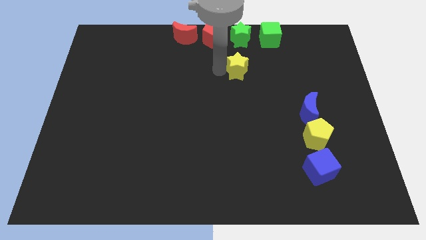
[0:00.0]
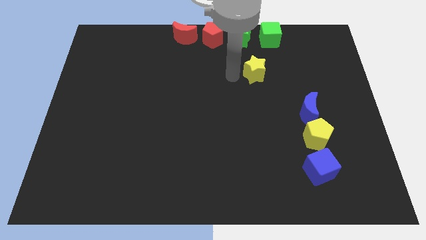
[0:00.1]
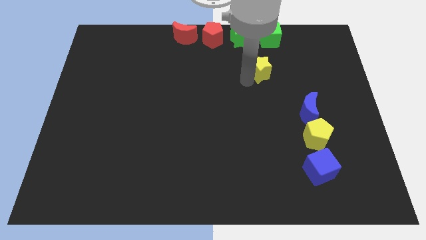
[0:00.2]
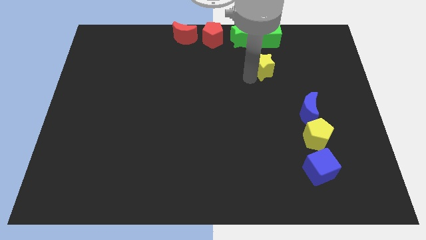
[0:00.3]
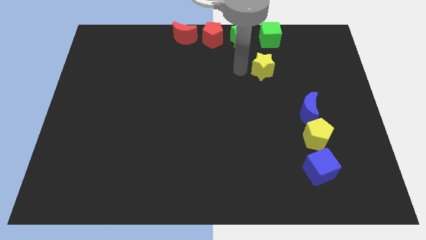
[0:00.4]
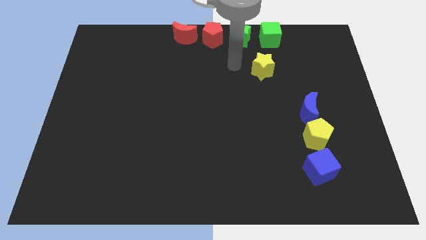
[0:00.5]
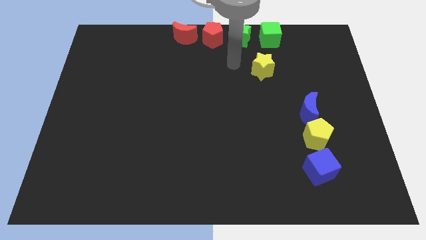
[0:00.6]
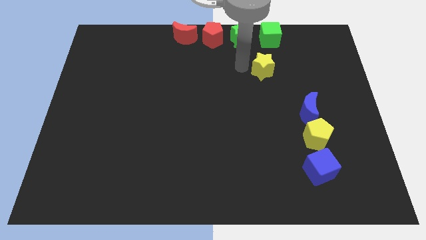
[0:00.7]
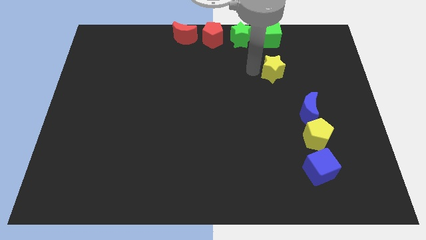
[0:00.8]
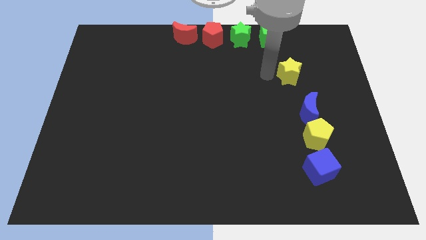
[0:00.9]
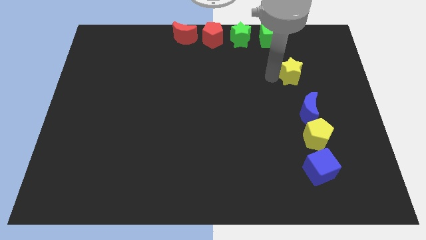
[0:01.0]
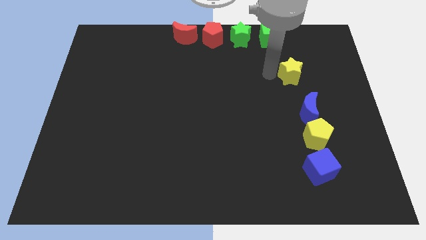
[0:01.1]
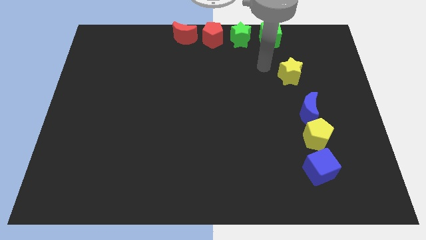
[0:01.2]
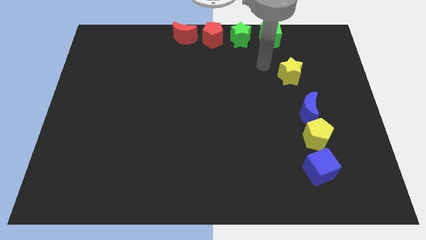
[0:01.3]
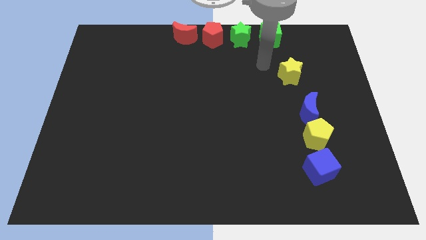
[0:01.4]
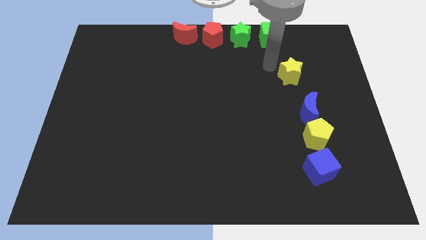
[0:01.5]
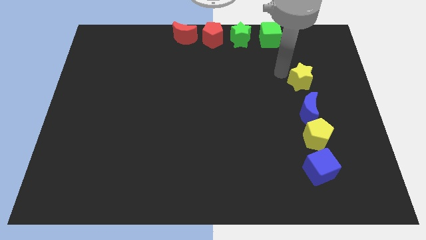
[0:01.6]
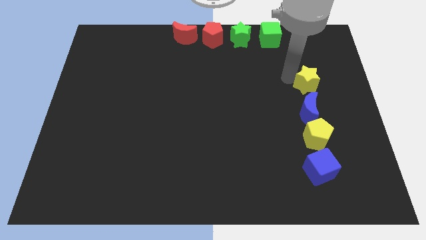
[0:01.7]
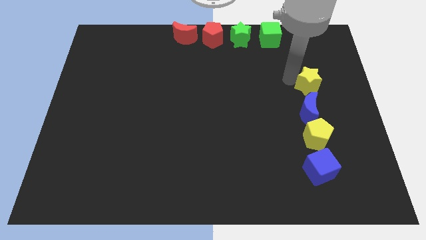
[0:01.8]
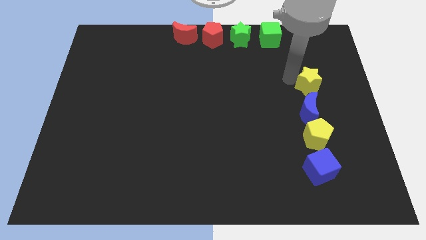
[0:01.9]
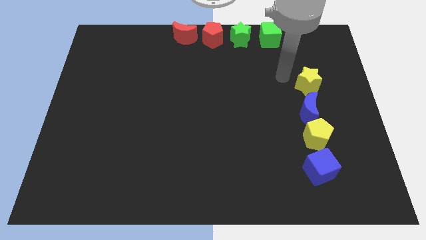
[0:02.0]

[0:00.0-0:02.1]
place the yellow star on top of blue crescent

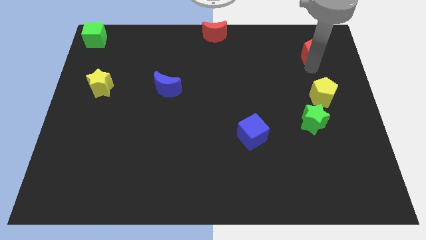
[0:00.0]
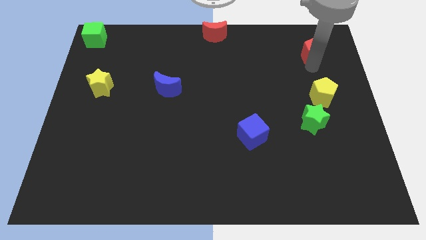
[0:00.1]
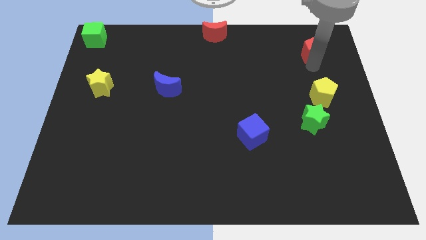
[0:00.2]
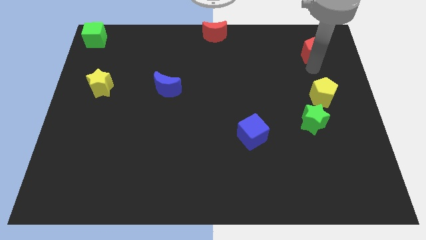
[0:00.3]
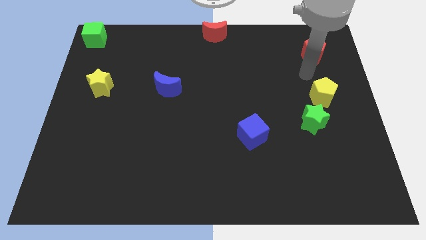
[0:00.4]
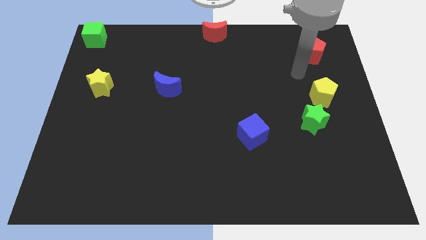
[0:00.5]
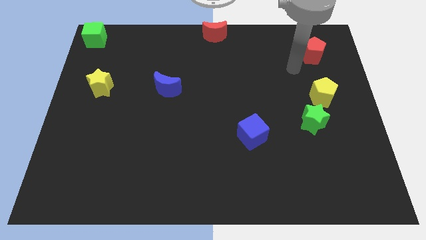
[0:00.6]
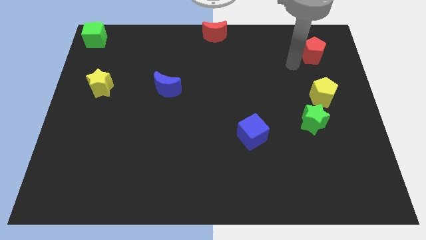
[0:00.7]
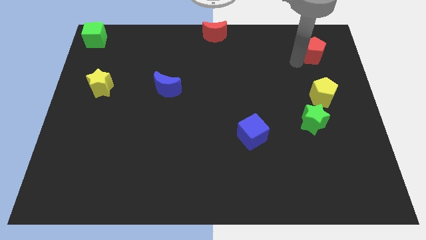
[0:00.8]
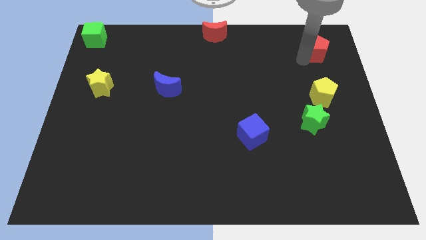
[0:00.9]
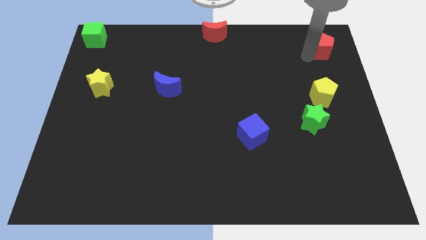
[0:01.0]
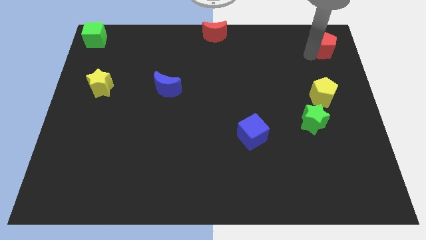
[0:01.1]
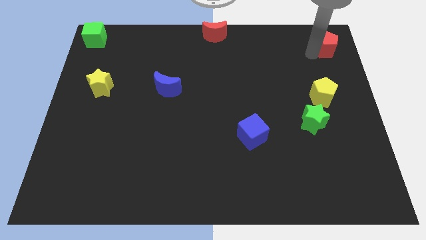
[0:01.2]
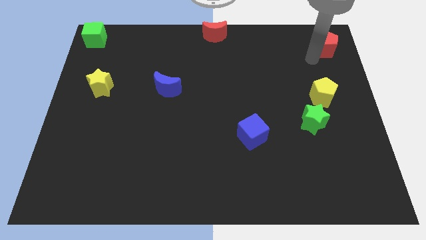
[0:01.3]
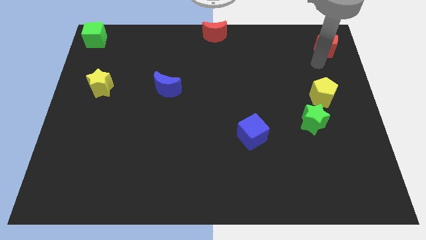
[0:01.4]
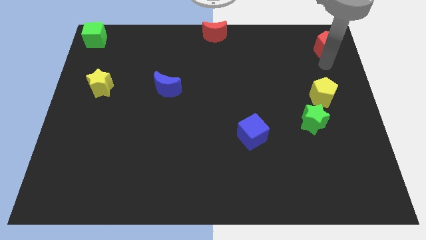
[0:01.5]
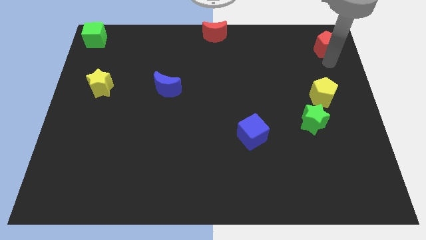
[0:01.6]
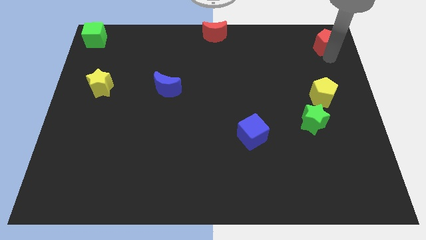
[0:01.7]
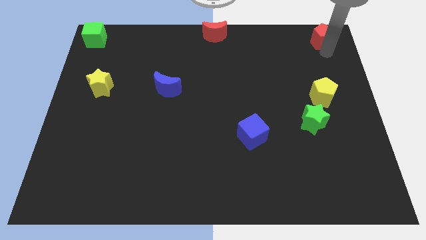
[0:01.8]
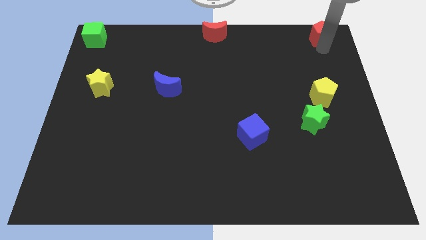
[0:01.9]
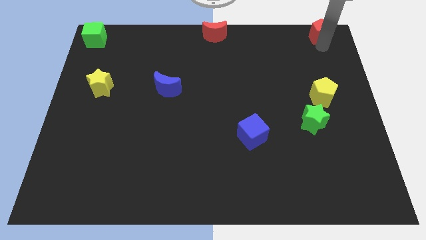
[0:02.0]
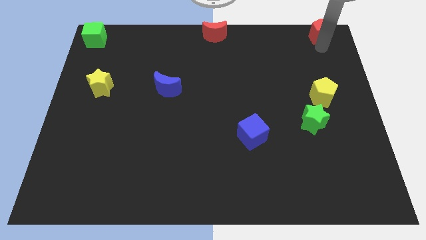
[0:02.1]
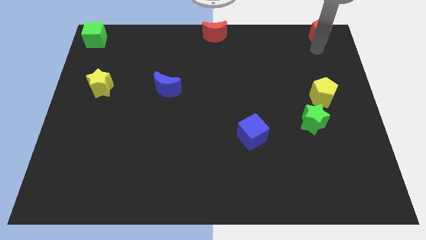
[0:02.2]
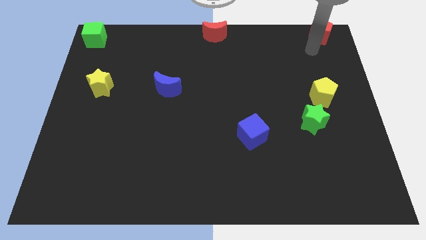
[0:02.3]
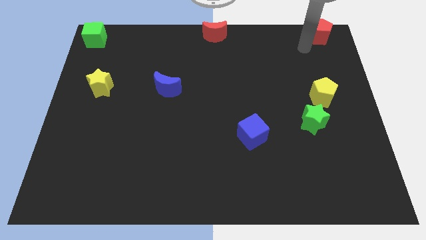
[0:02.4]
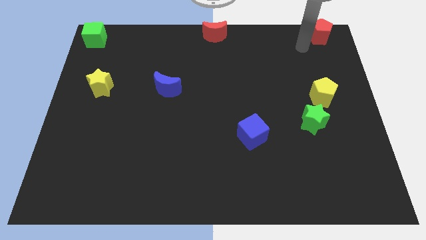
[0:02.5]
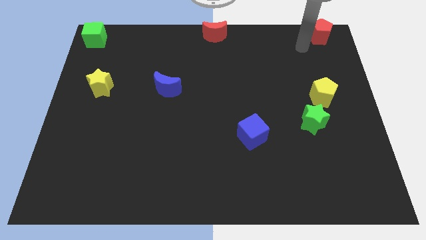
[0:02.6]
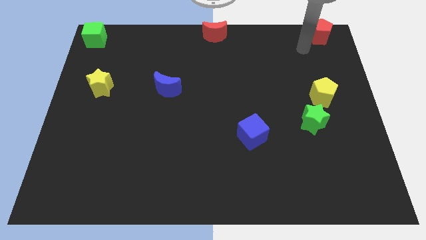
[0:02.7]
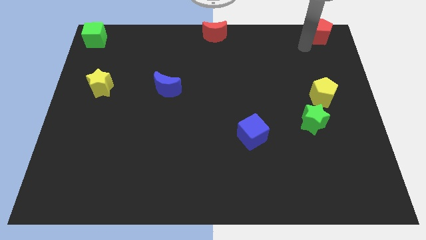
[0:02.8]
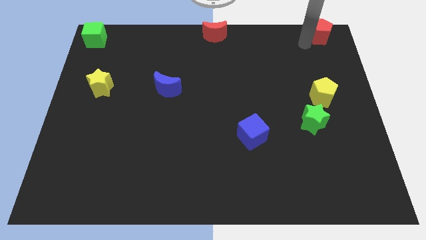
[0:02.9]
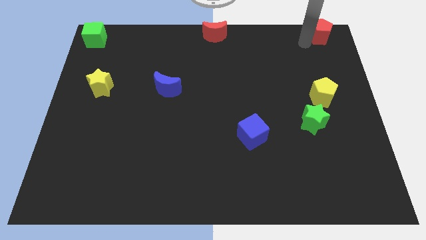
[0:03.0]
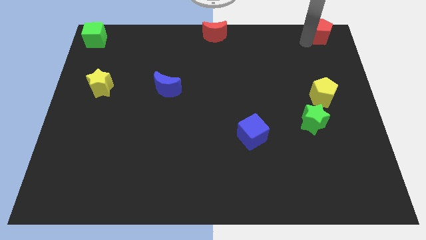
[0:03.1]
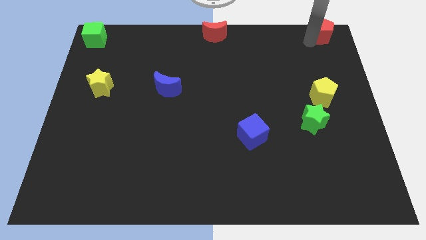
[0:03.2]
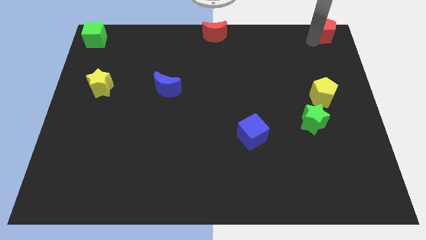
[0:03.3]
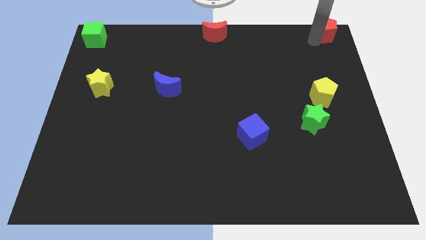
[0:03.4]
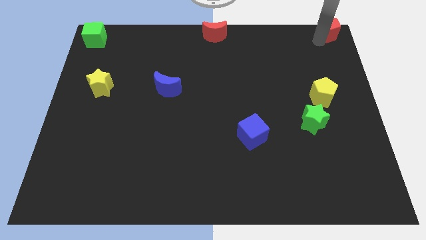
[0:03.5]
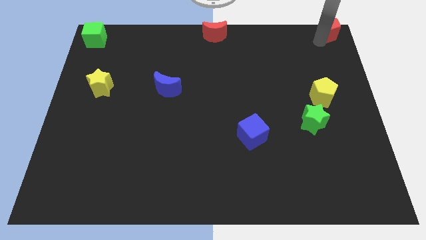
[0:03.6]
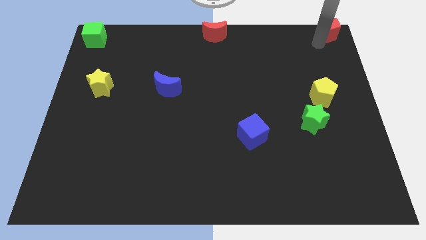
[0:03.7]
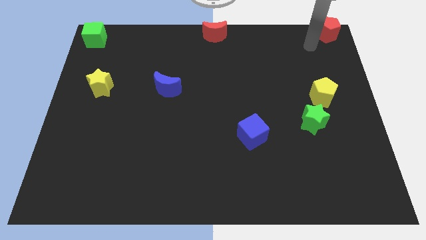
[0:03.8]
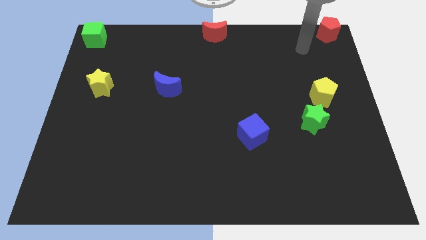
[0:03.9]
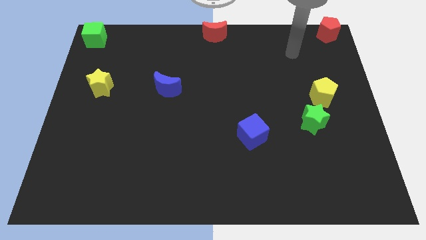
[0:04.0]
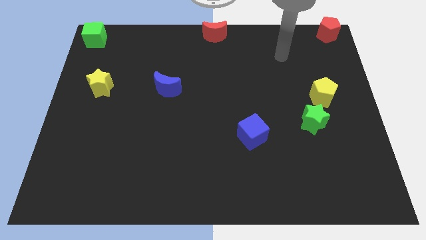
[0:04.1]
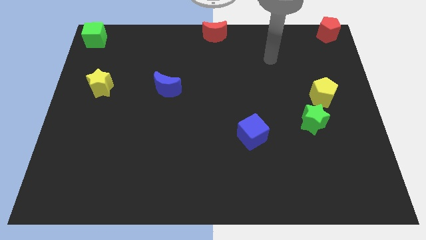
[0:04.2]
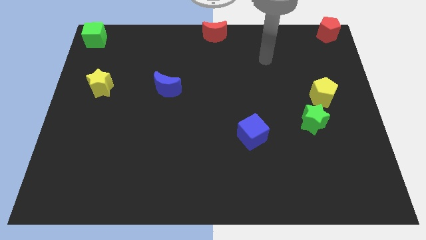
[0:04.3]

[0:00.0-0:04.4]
slide the red pentagon to the top right corner

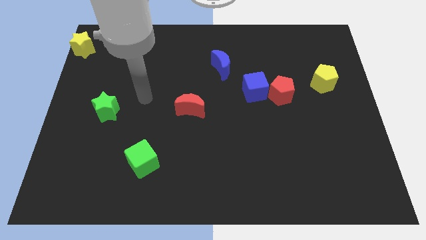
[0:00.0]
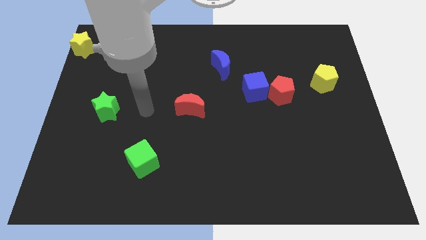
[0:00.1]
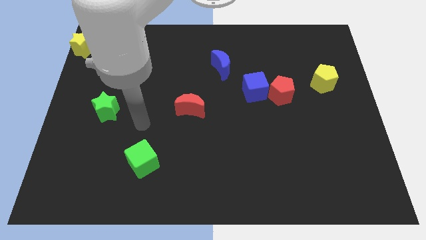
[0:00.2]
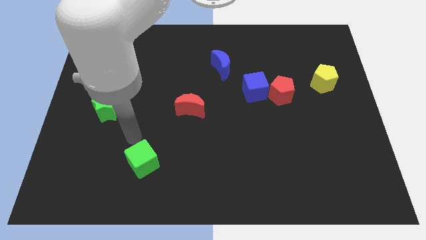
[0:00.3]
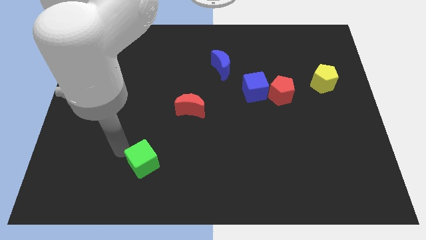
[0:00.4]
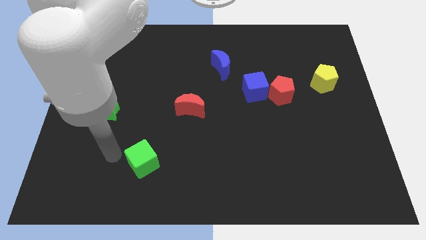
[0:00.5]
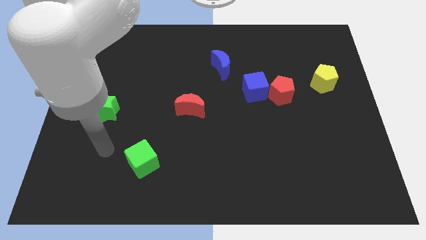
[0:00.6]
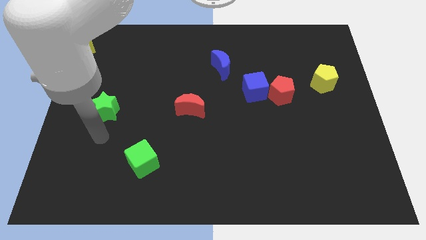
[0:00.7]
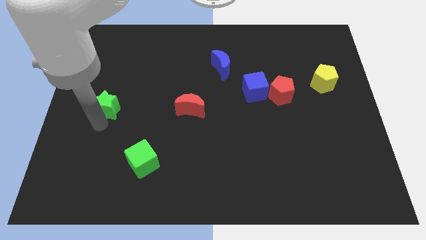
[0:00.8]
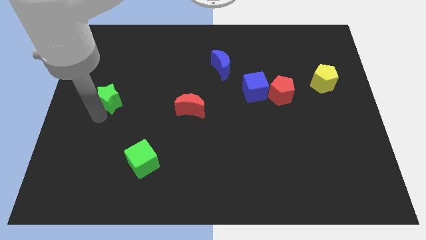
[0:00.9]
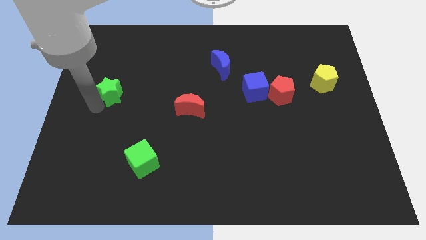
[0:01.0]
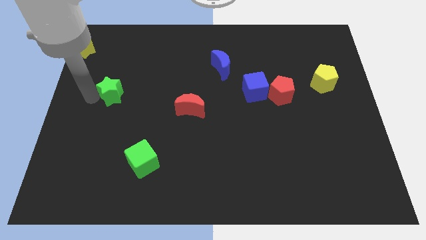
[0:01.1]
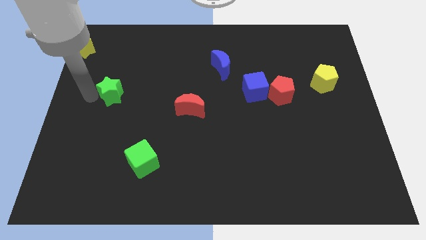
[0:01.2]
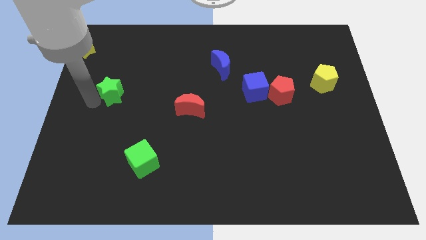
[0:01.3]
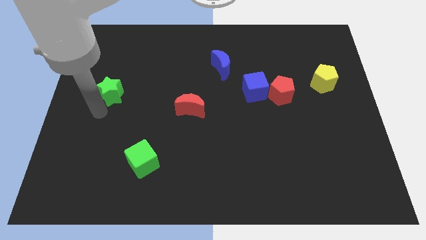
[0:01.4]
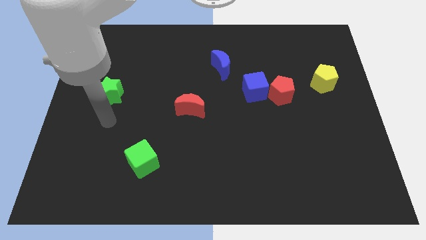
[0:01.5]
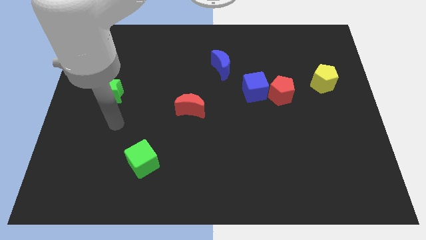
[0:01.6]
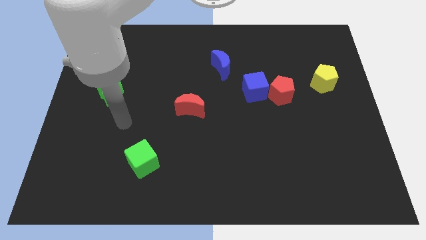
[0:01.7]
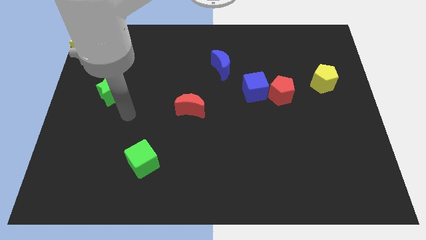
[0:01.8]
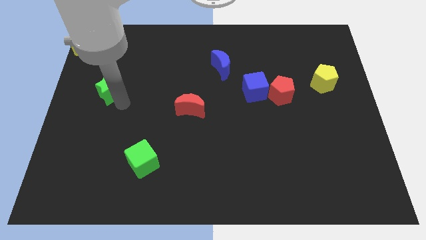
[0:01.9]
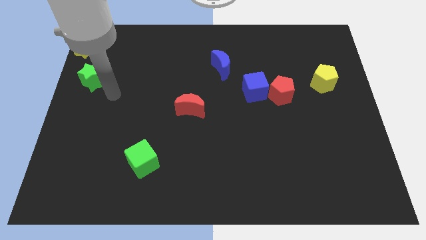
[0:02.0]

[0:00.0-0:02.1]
slide the green star towards the yellow star

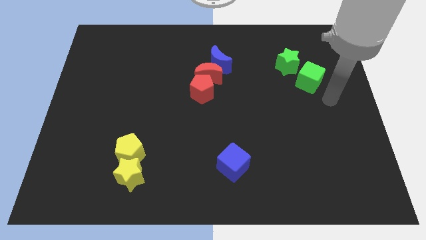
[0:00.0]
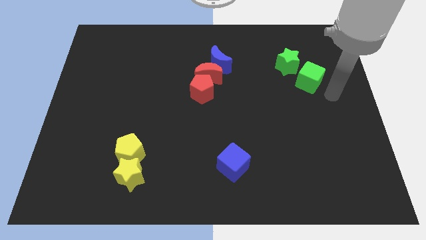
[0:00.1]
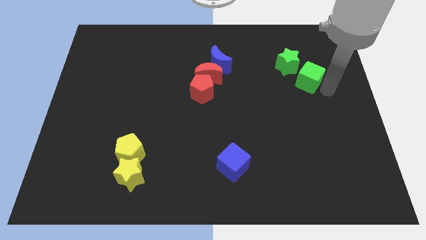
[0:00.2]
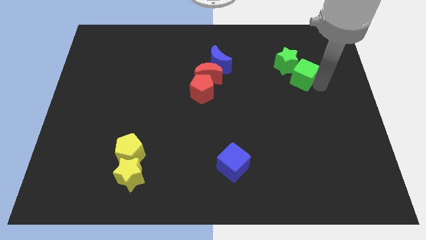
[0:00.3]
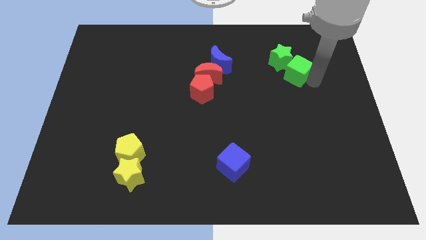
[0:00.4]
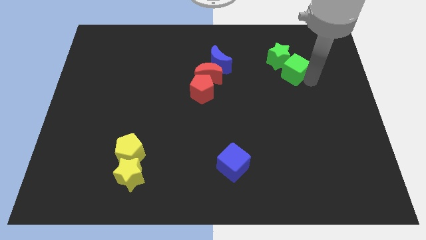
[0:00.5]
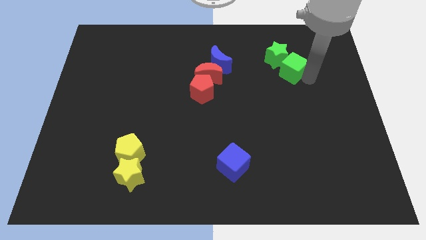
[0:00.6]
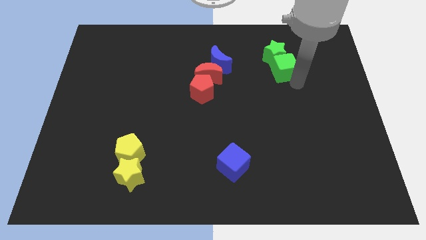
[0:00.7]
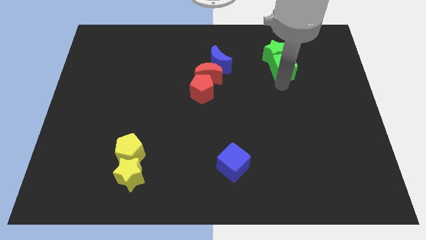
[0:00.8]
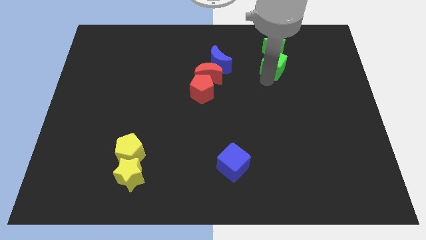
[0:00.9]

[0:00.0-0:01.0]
move green cube along with green star
